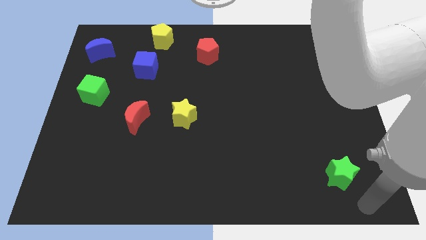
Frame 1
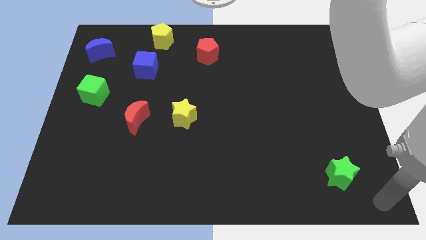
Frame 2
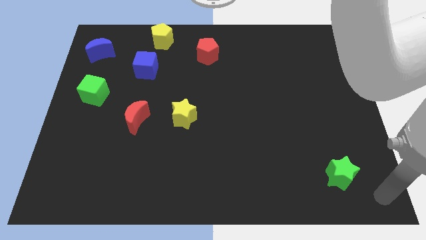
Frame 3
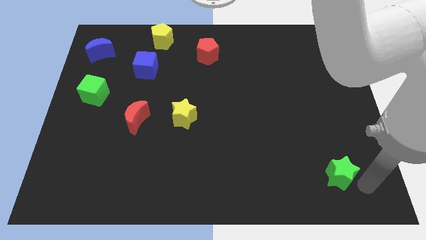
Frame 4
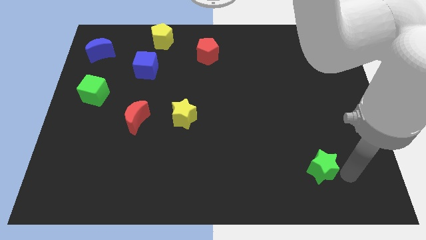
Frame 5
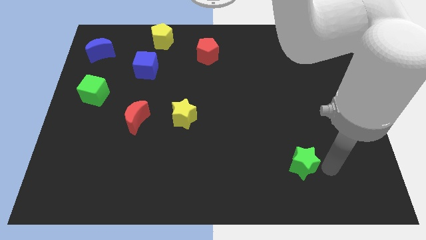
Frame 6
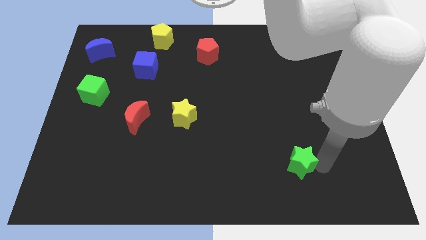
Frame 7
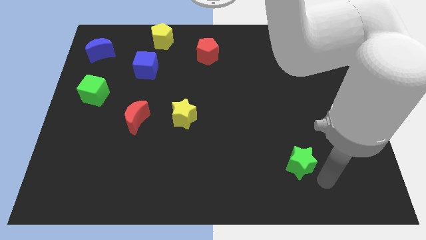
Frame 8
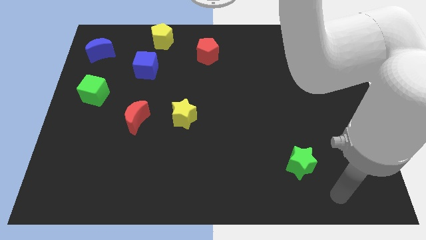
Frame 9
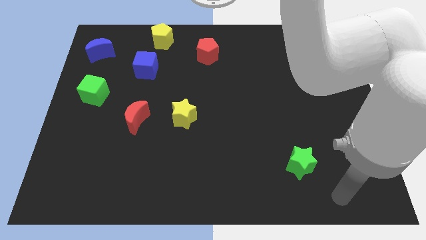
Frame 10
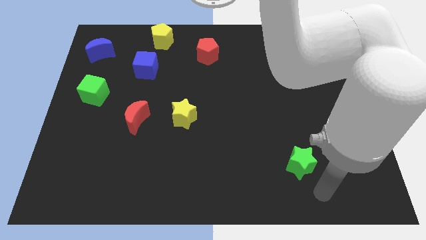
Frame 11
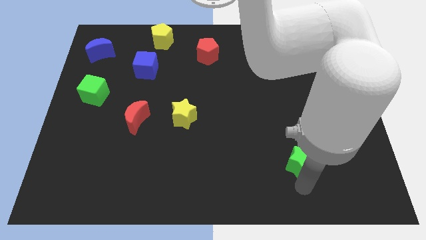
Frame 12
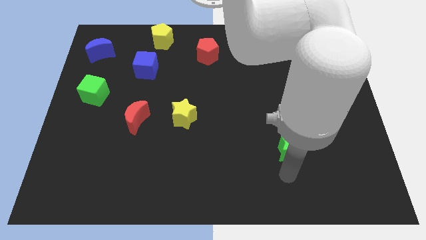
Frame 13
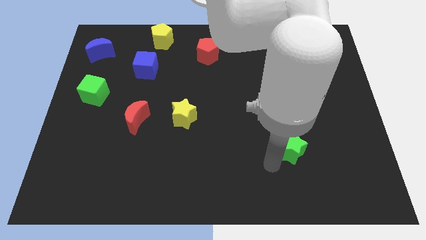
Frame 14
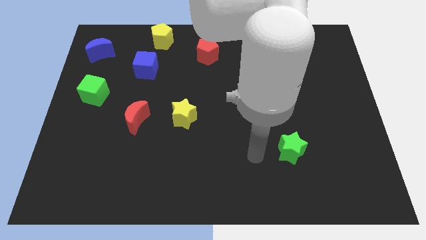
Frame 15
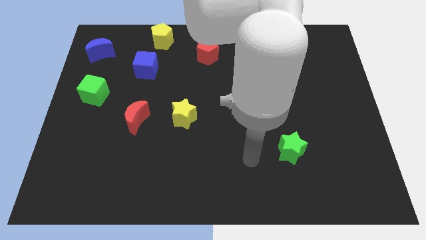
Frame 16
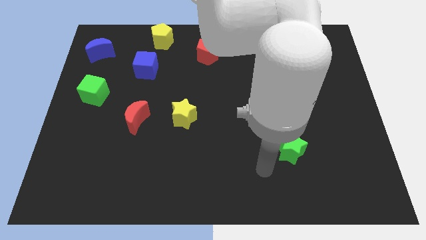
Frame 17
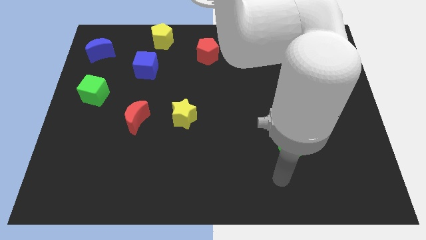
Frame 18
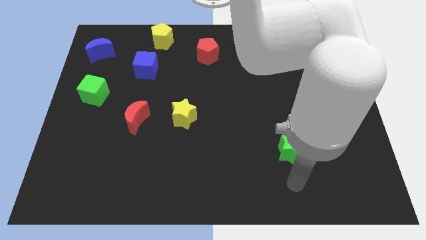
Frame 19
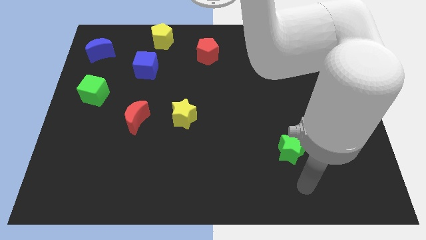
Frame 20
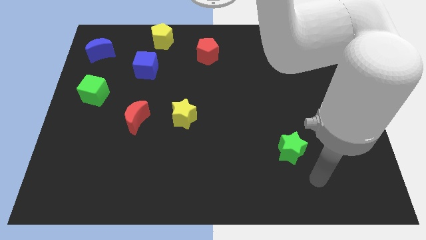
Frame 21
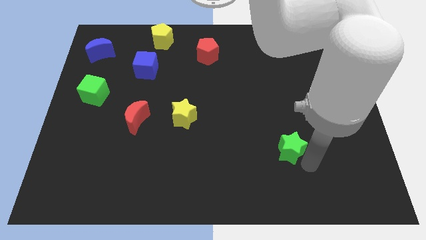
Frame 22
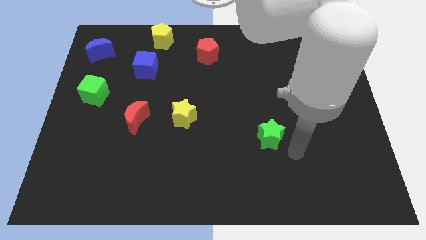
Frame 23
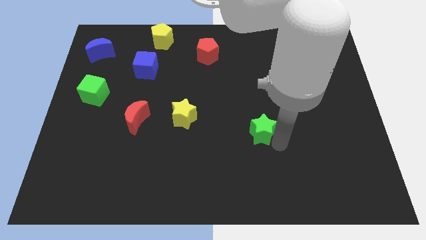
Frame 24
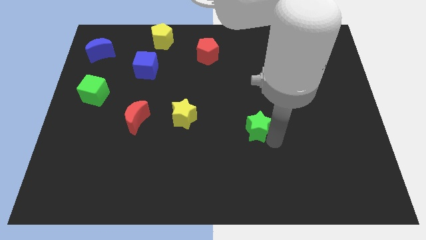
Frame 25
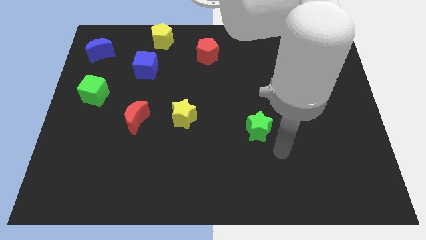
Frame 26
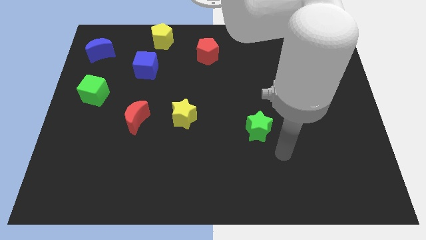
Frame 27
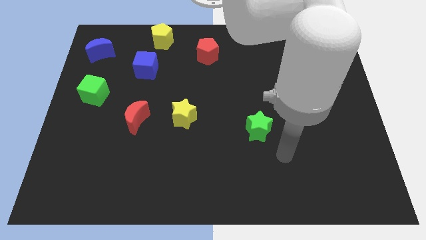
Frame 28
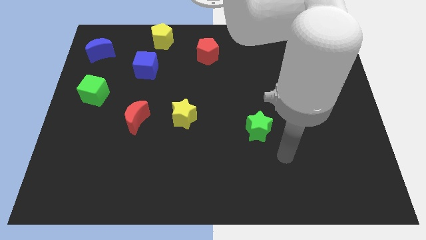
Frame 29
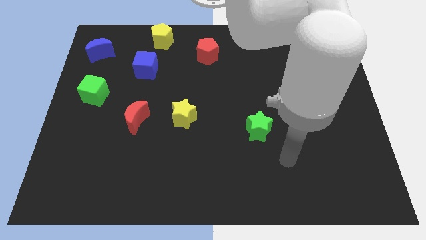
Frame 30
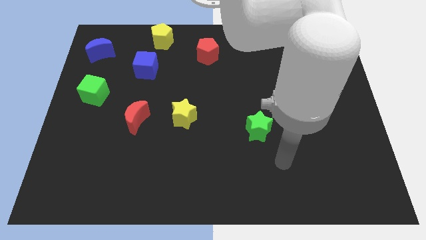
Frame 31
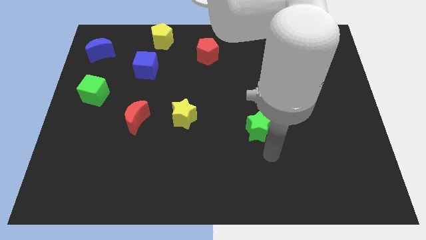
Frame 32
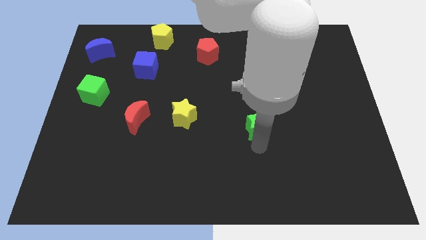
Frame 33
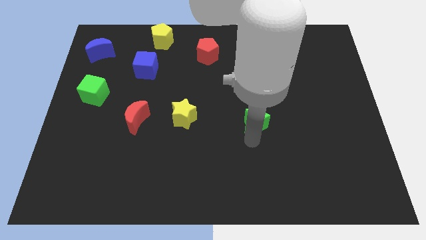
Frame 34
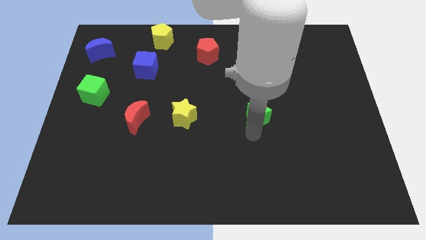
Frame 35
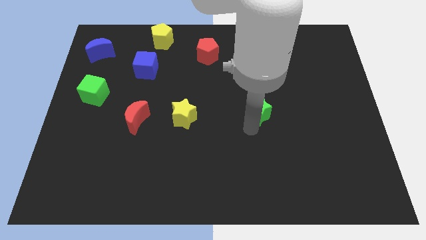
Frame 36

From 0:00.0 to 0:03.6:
move the green star right to the yellow star

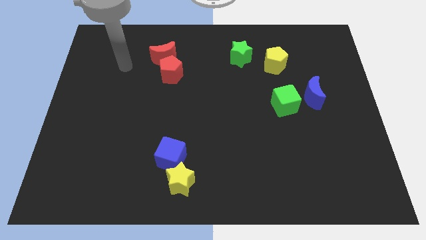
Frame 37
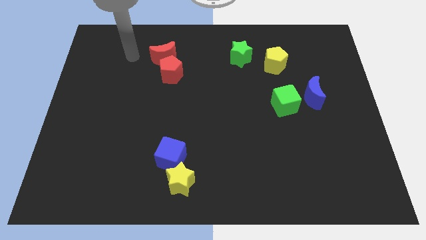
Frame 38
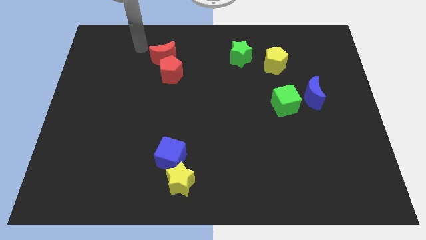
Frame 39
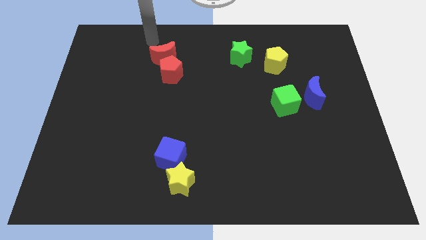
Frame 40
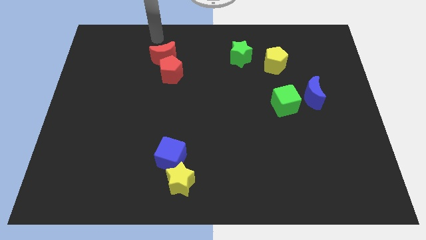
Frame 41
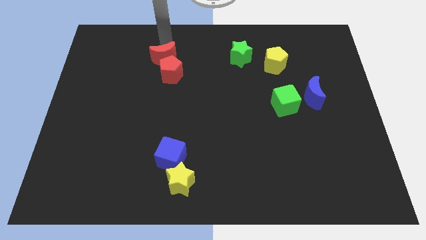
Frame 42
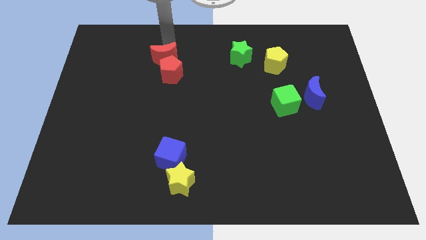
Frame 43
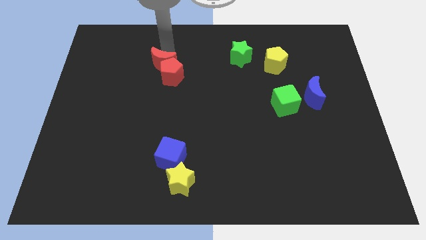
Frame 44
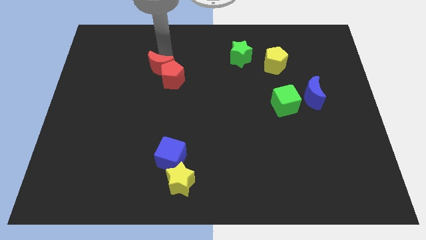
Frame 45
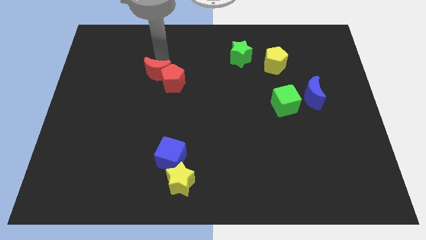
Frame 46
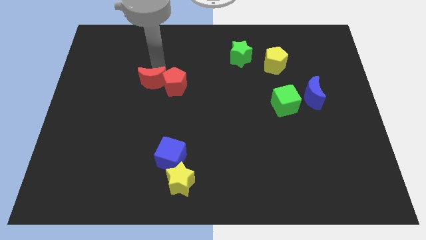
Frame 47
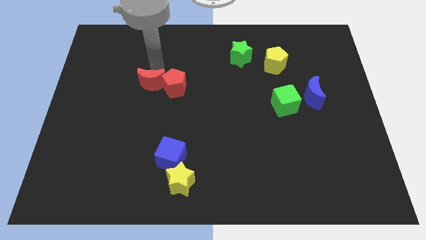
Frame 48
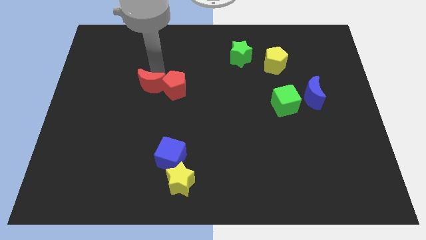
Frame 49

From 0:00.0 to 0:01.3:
push the red blocks to the center

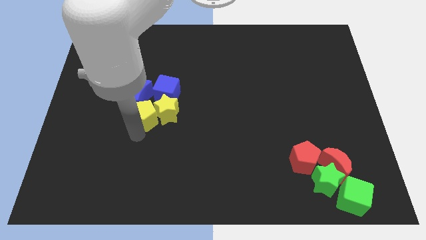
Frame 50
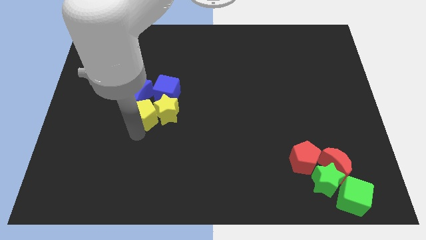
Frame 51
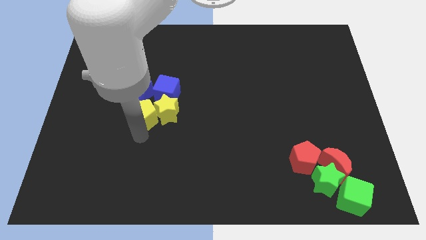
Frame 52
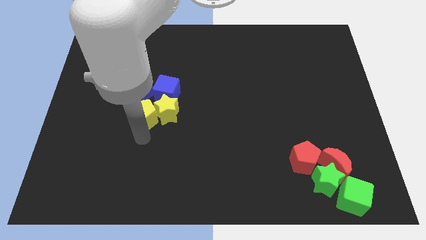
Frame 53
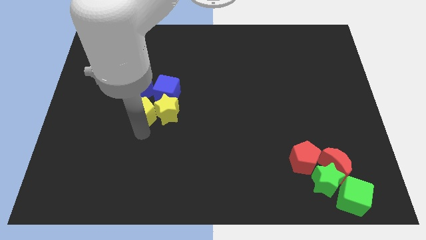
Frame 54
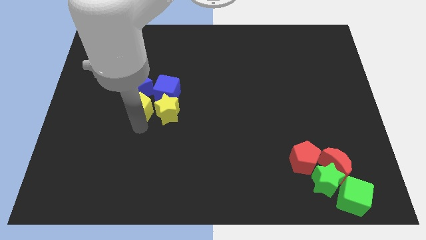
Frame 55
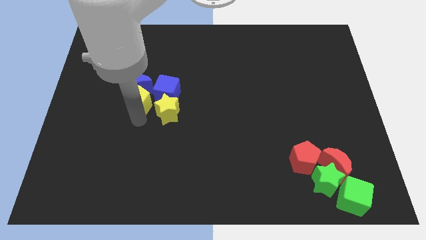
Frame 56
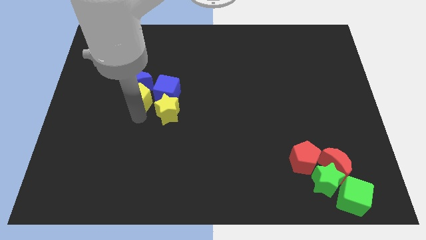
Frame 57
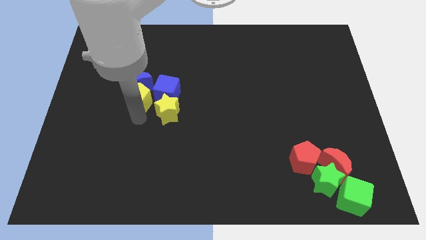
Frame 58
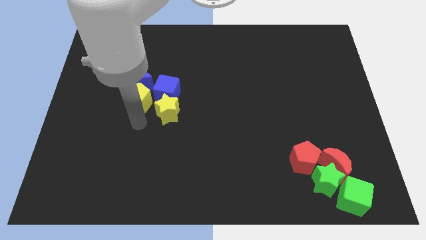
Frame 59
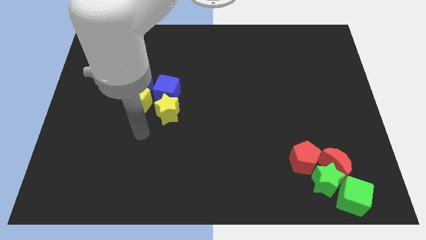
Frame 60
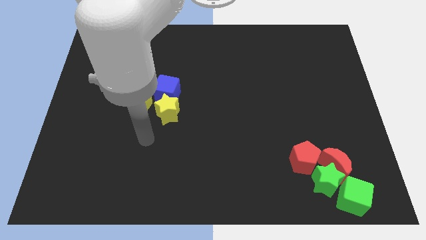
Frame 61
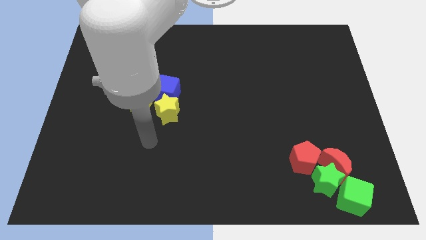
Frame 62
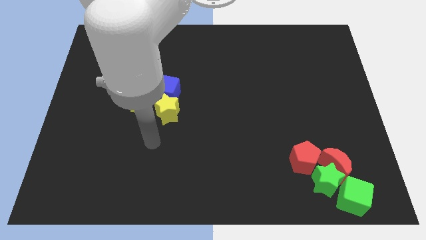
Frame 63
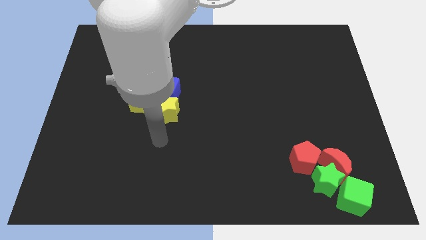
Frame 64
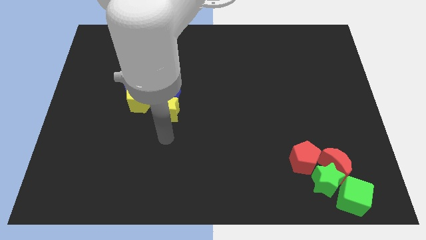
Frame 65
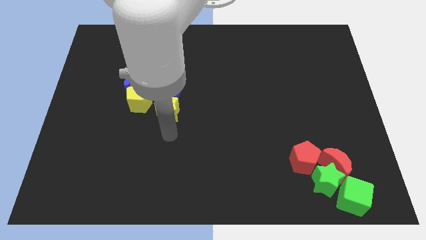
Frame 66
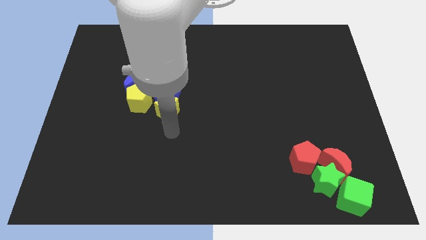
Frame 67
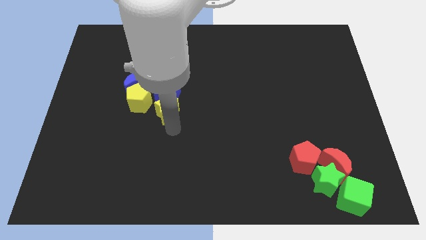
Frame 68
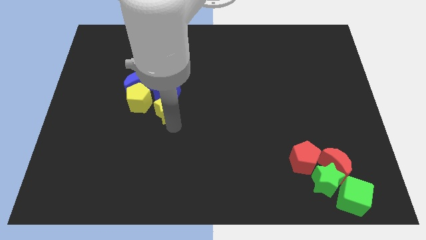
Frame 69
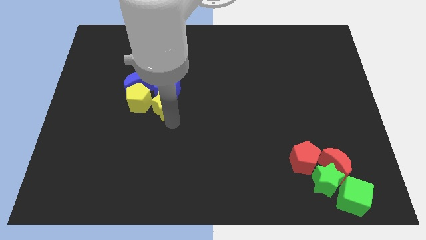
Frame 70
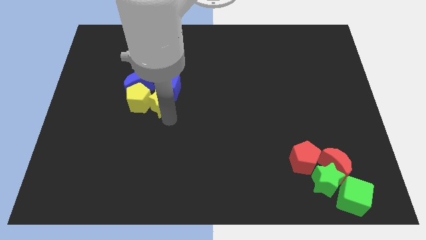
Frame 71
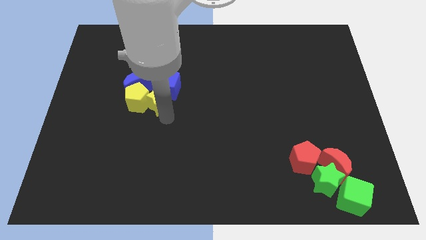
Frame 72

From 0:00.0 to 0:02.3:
make both the yellow blocks and both the blue blocks a group

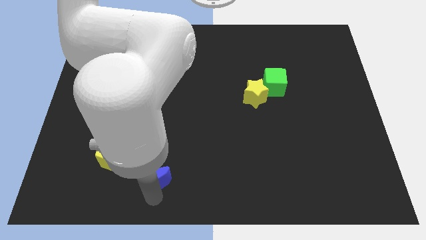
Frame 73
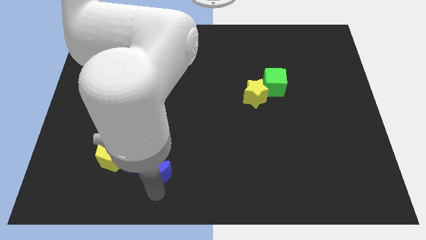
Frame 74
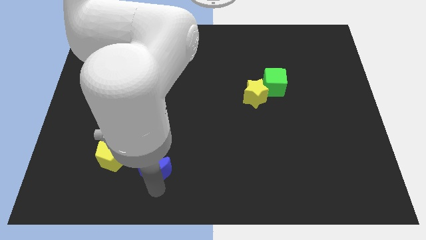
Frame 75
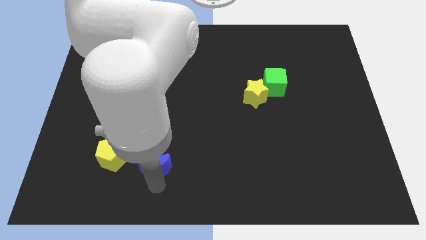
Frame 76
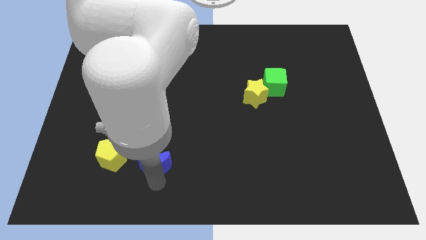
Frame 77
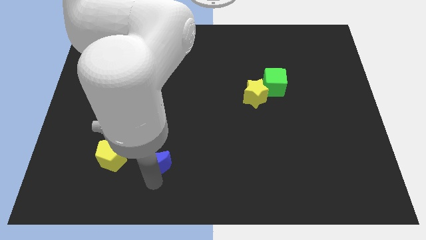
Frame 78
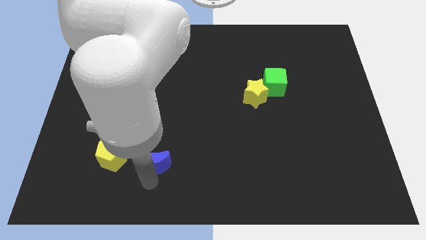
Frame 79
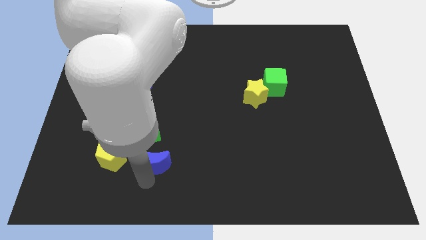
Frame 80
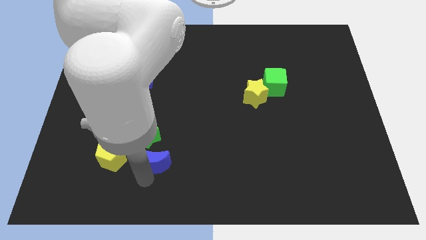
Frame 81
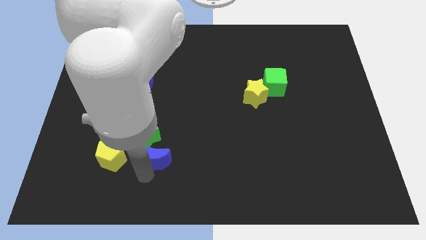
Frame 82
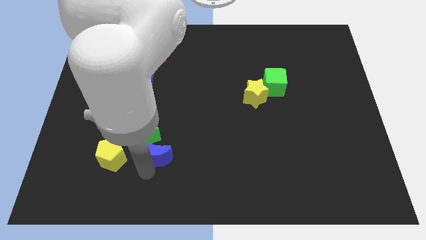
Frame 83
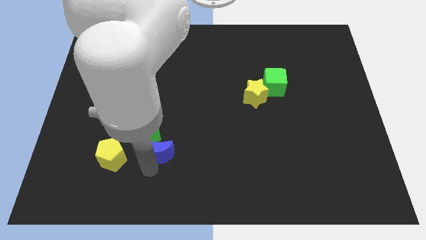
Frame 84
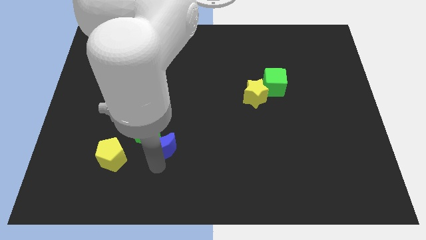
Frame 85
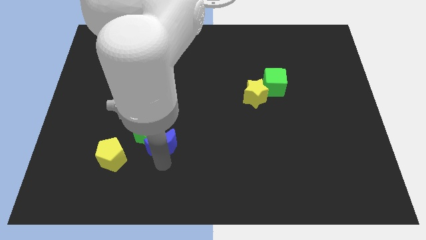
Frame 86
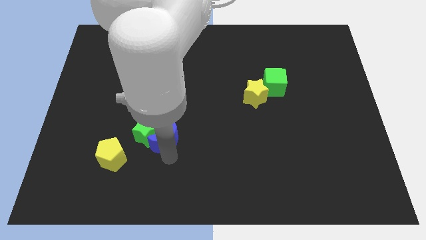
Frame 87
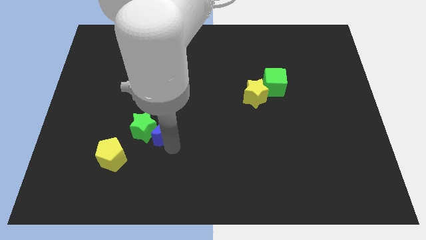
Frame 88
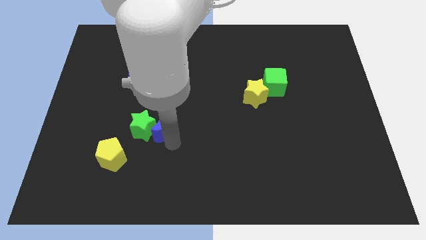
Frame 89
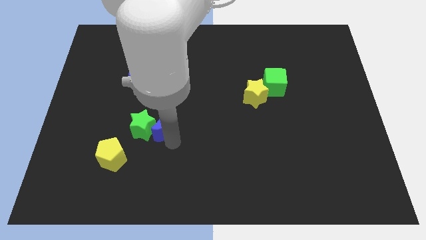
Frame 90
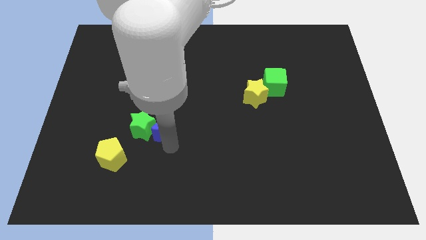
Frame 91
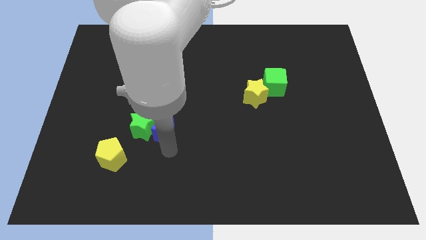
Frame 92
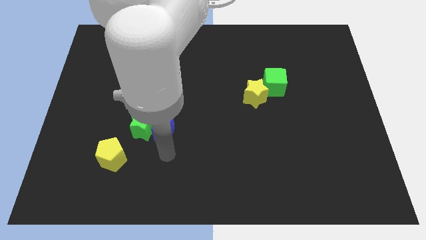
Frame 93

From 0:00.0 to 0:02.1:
put the blue moon into the green star
